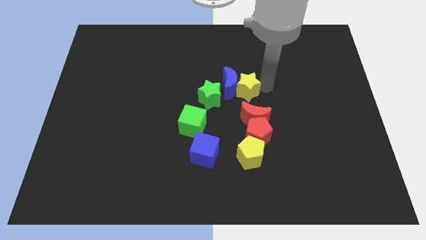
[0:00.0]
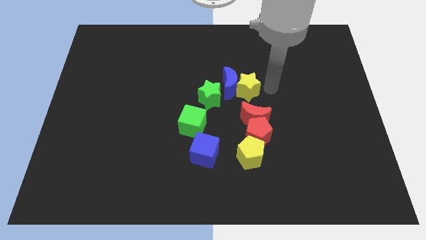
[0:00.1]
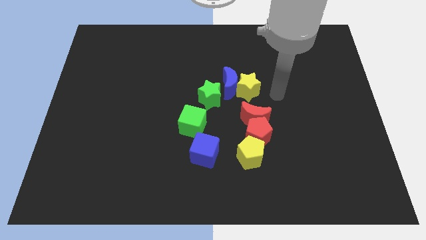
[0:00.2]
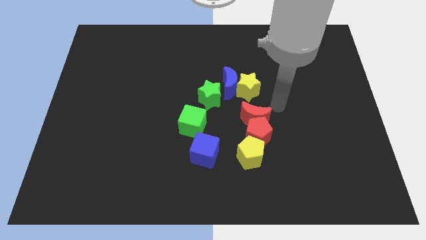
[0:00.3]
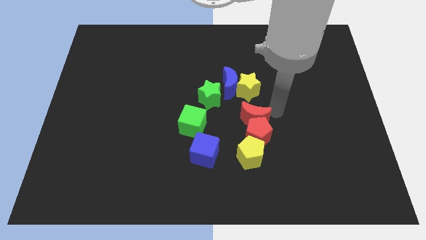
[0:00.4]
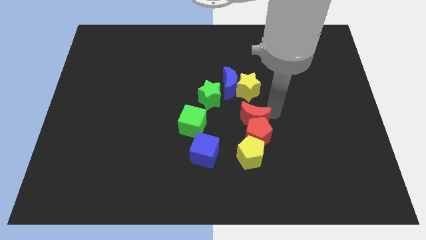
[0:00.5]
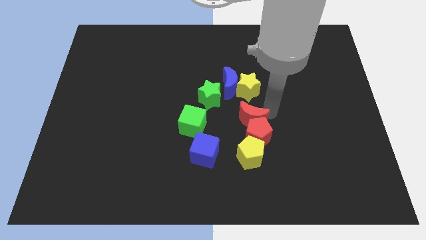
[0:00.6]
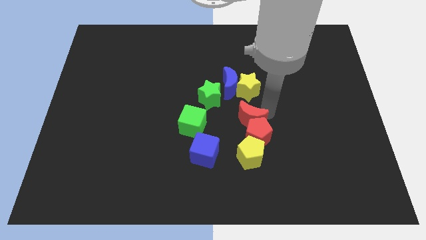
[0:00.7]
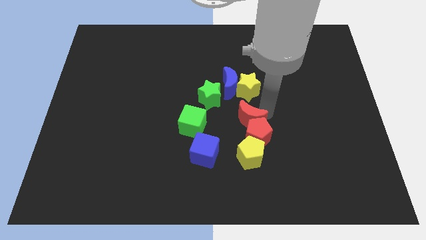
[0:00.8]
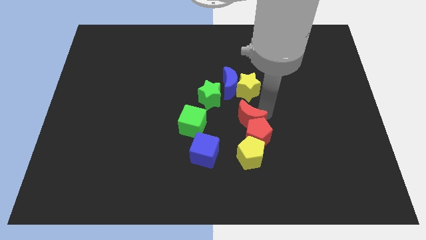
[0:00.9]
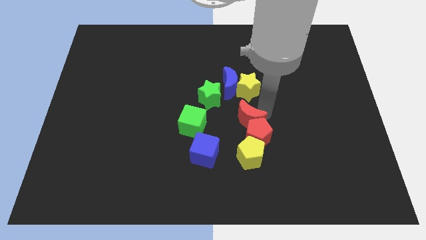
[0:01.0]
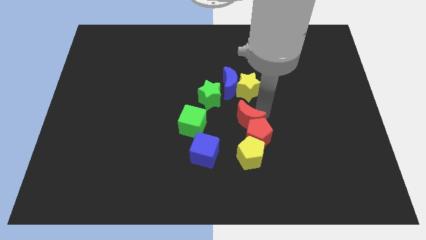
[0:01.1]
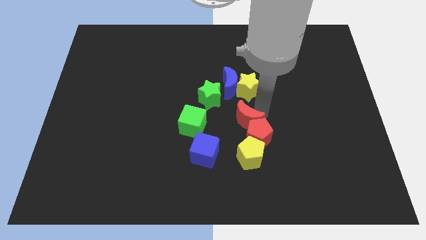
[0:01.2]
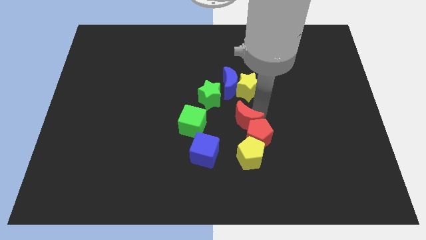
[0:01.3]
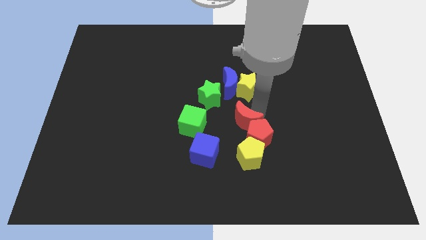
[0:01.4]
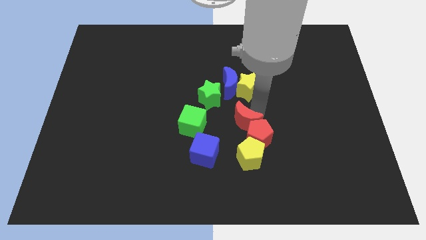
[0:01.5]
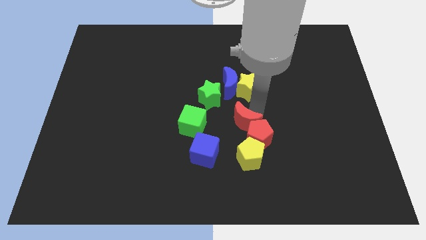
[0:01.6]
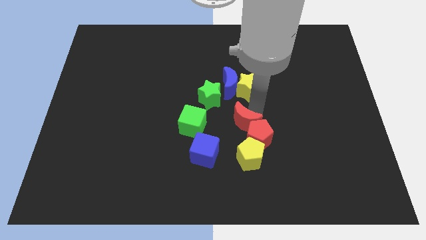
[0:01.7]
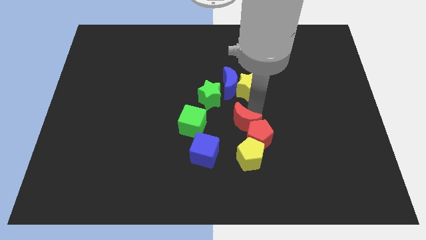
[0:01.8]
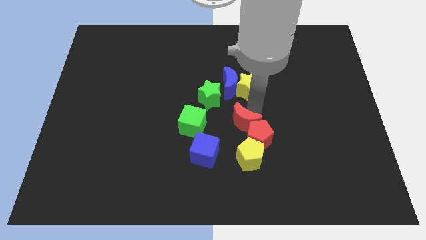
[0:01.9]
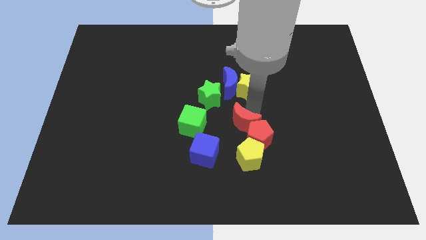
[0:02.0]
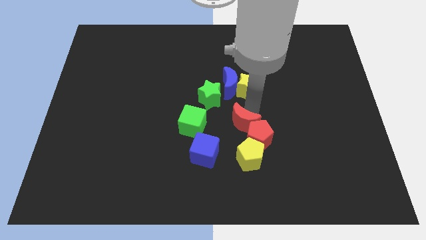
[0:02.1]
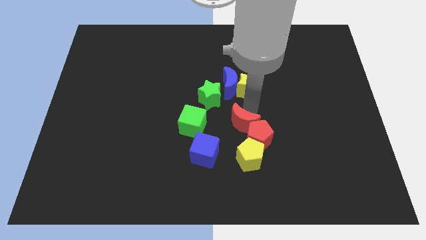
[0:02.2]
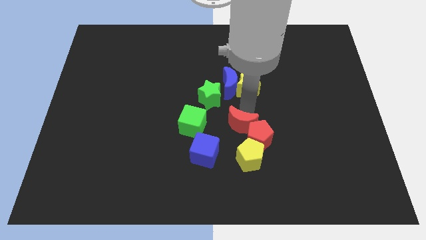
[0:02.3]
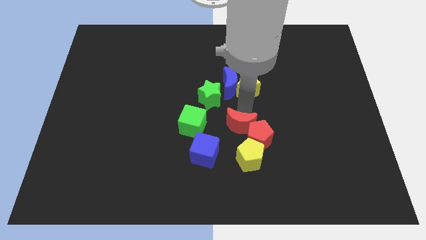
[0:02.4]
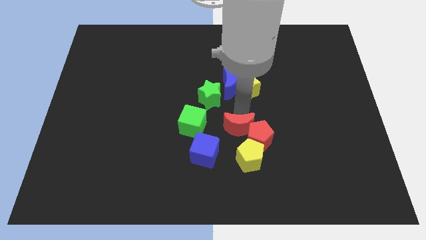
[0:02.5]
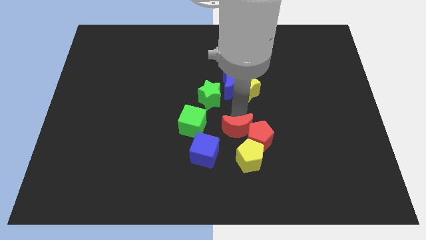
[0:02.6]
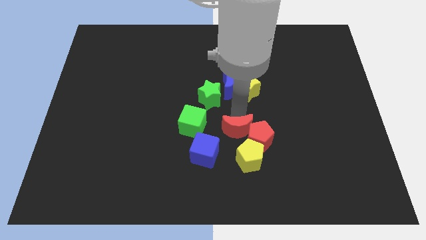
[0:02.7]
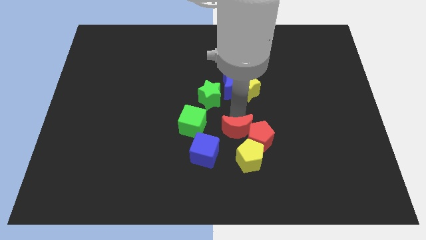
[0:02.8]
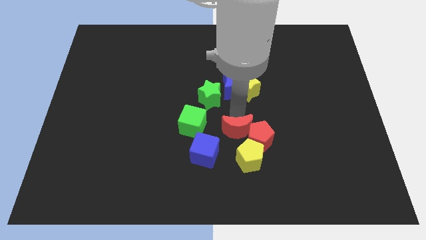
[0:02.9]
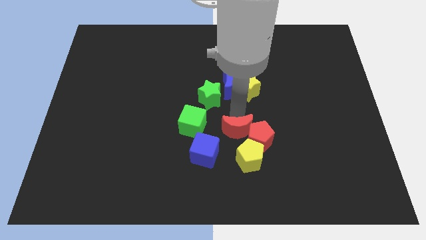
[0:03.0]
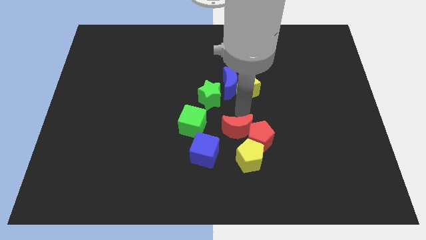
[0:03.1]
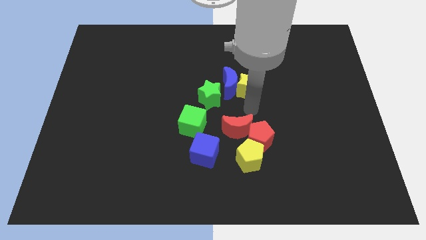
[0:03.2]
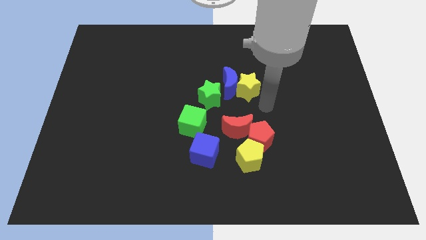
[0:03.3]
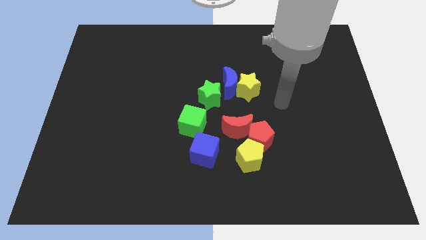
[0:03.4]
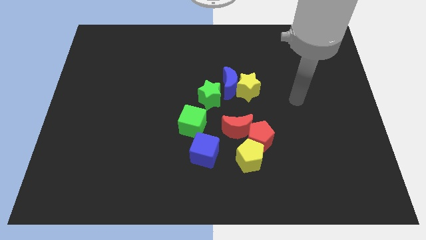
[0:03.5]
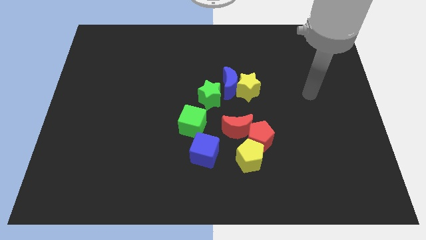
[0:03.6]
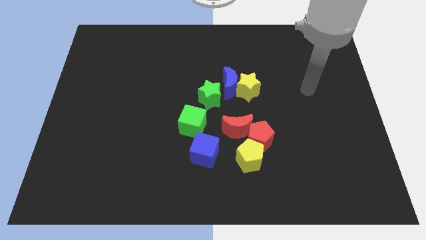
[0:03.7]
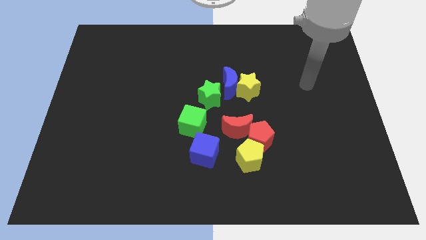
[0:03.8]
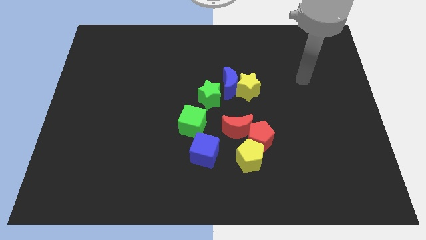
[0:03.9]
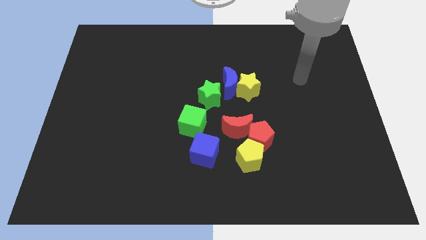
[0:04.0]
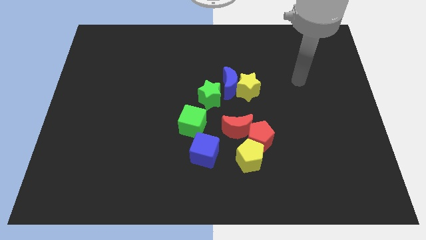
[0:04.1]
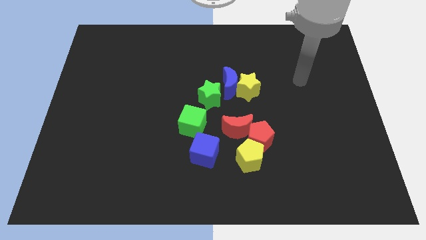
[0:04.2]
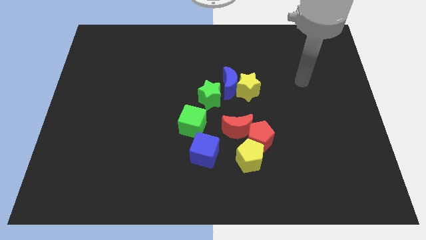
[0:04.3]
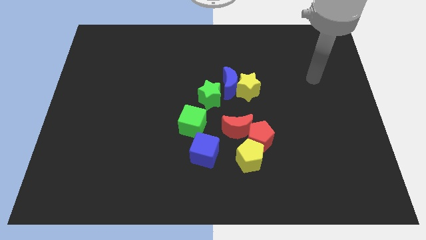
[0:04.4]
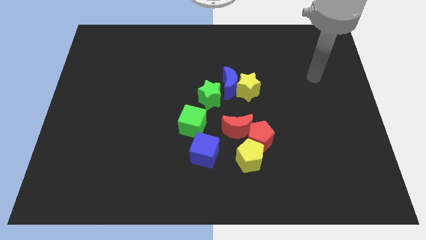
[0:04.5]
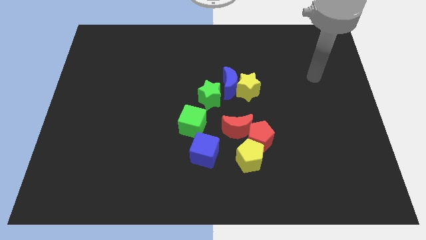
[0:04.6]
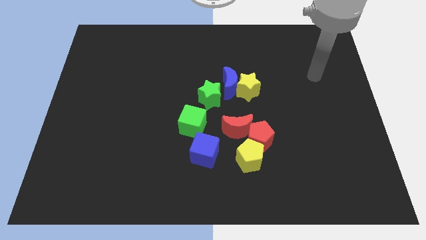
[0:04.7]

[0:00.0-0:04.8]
place the red crescent horizontal right to green cube

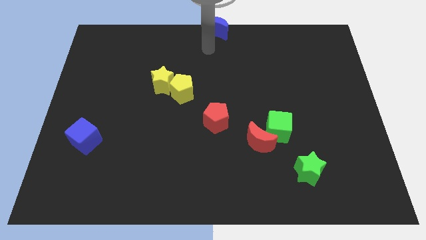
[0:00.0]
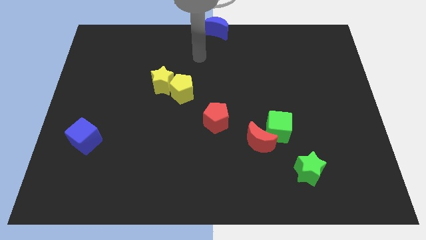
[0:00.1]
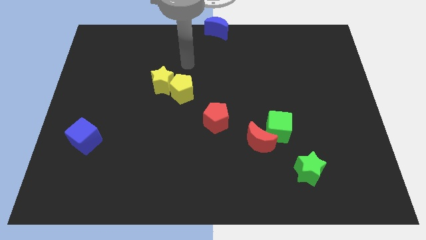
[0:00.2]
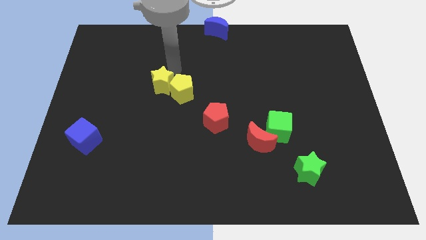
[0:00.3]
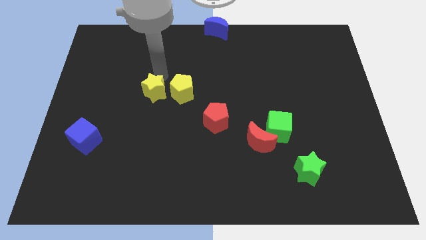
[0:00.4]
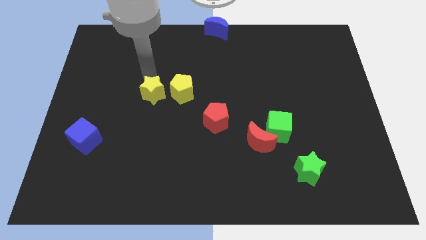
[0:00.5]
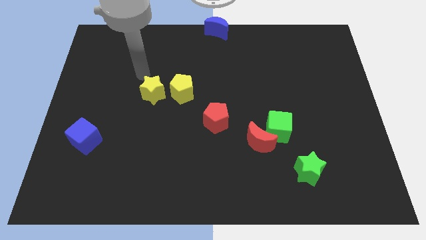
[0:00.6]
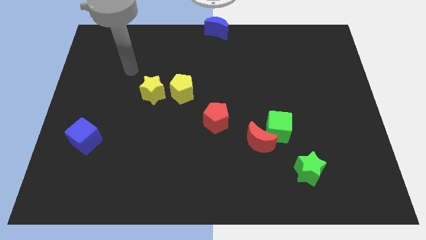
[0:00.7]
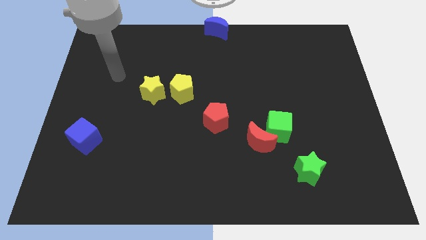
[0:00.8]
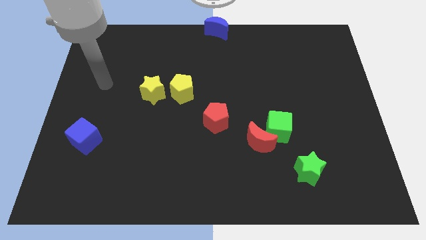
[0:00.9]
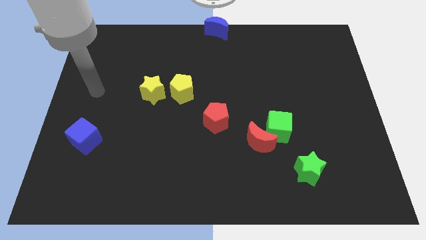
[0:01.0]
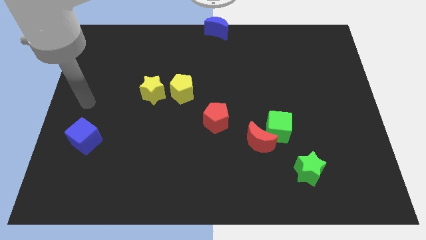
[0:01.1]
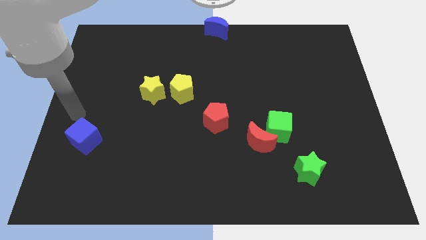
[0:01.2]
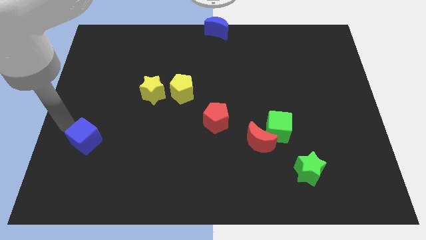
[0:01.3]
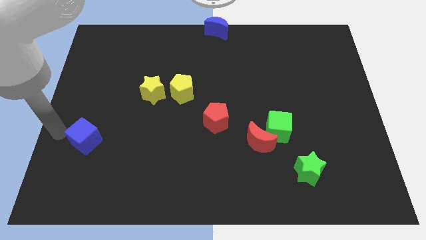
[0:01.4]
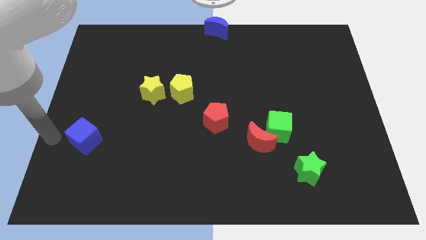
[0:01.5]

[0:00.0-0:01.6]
point your arm at the left side of the blue cube

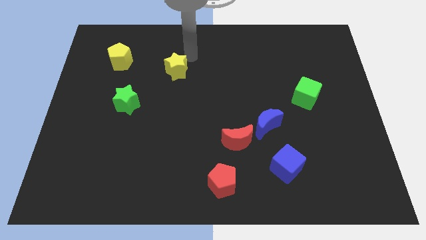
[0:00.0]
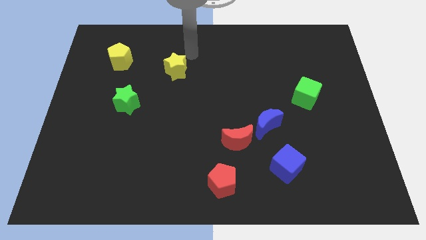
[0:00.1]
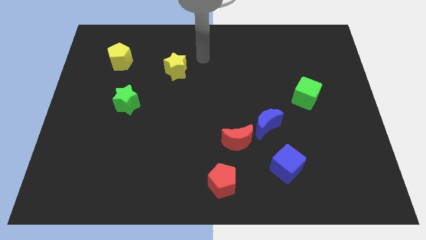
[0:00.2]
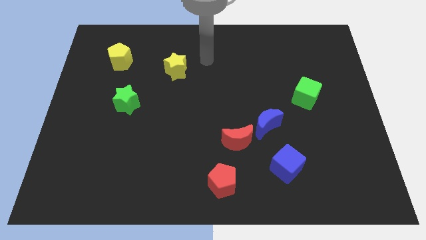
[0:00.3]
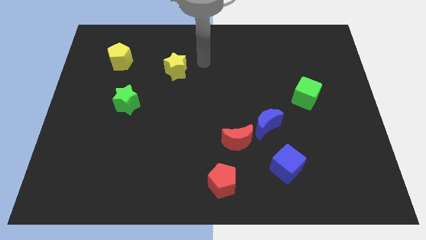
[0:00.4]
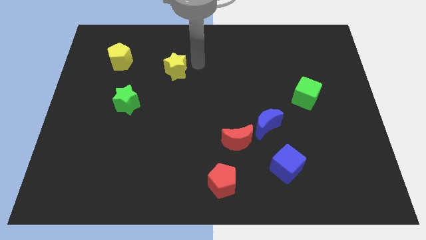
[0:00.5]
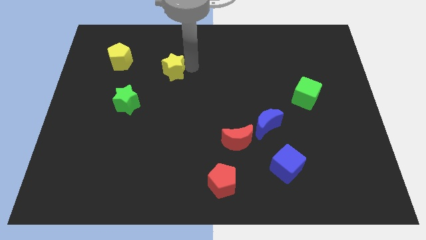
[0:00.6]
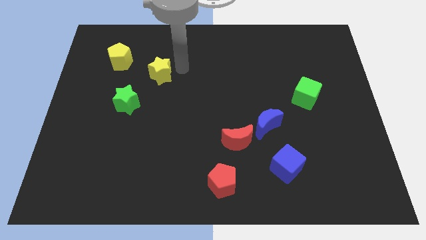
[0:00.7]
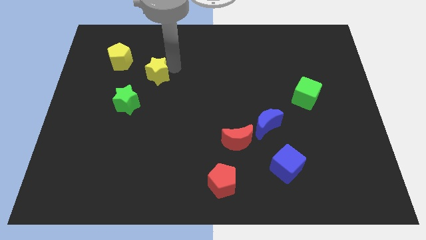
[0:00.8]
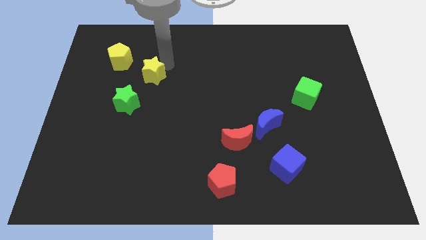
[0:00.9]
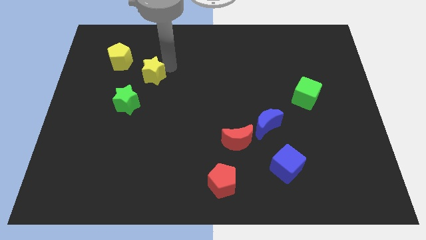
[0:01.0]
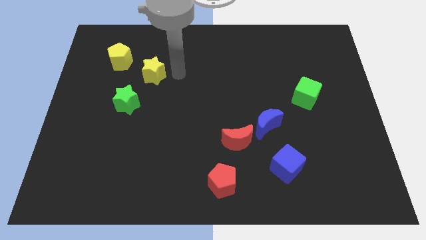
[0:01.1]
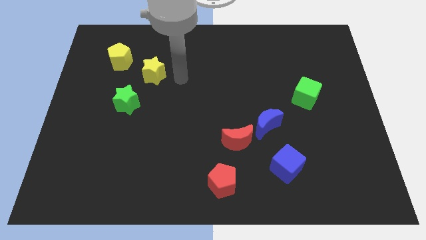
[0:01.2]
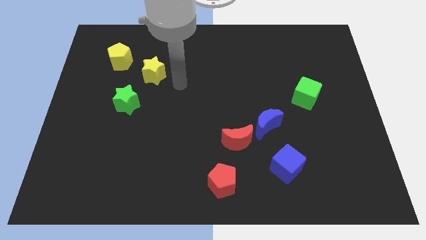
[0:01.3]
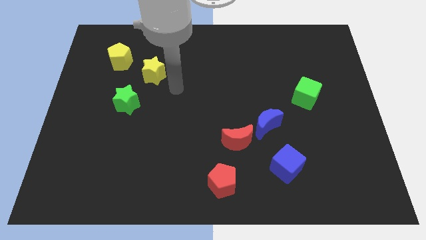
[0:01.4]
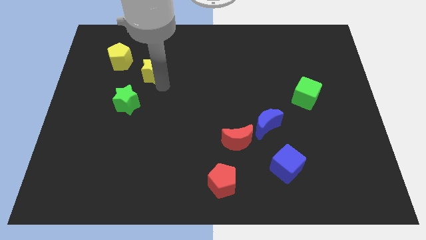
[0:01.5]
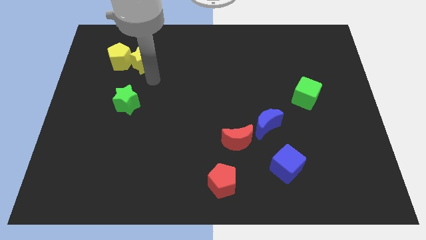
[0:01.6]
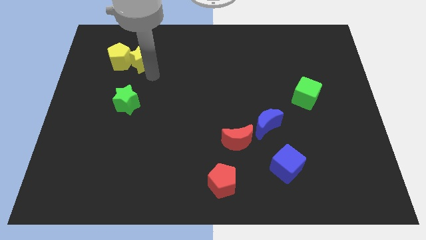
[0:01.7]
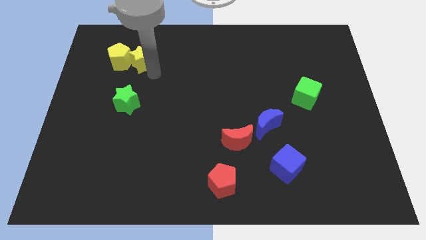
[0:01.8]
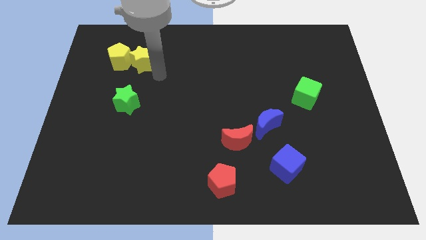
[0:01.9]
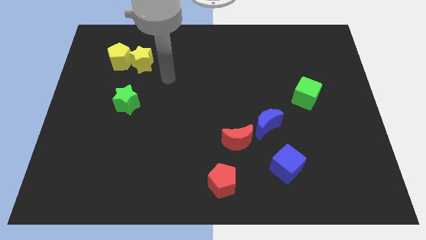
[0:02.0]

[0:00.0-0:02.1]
push the yellow star towards the yellow pentagon

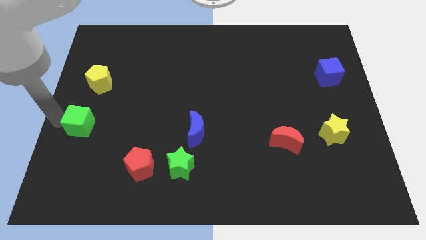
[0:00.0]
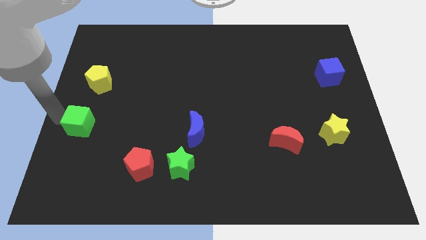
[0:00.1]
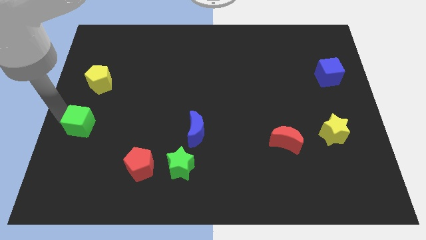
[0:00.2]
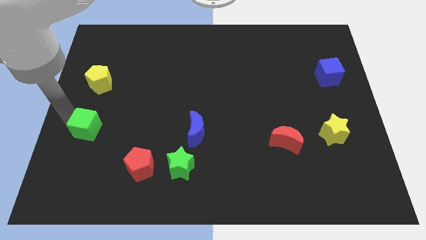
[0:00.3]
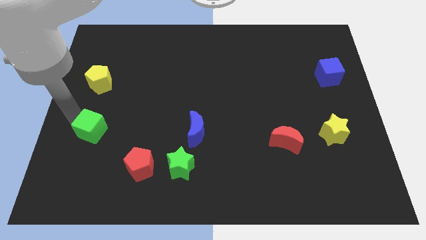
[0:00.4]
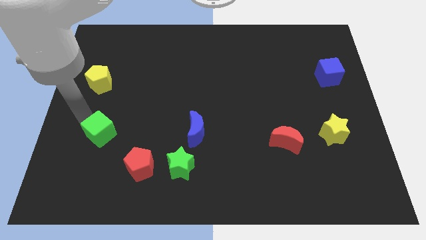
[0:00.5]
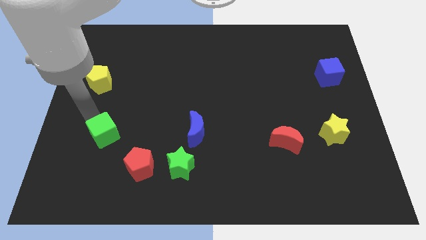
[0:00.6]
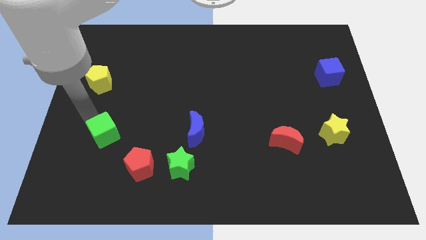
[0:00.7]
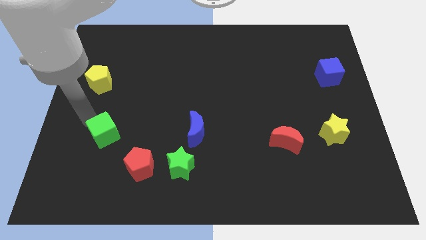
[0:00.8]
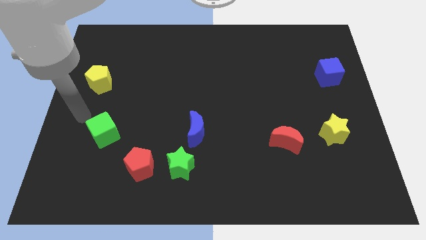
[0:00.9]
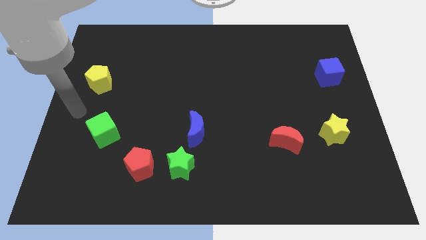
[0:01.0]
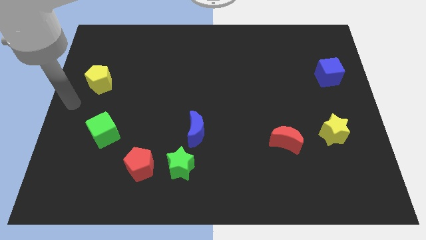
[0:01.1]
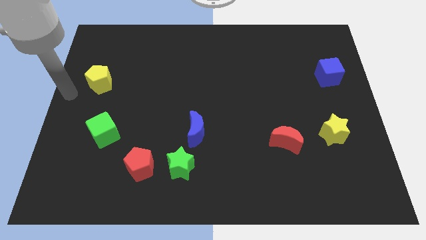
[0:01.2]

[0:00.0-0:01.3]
move the green cube to the right of the board
